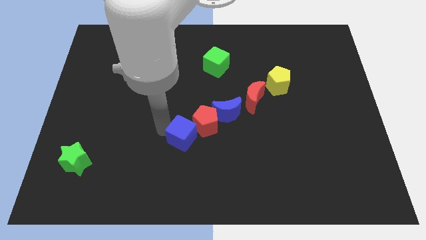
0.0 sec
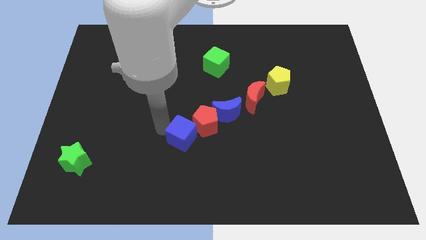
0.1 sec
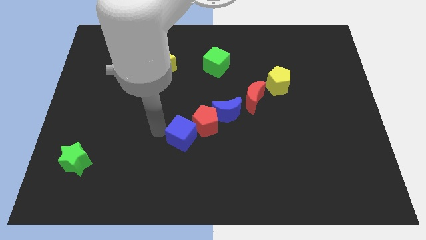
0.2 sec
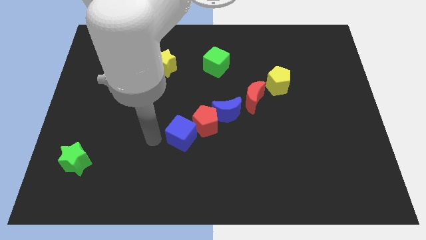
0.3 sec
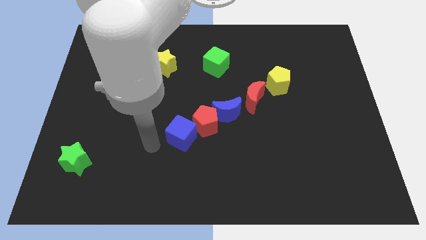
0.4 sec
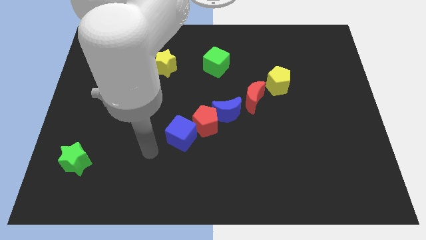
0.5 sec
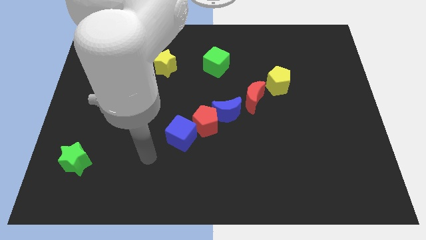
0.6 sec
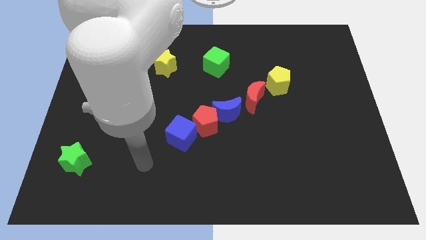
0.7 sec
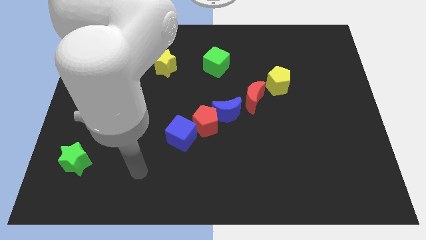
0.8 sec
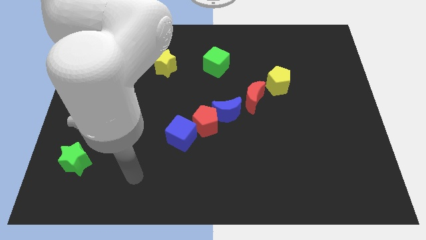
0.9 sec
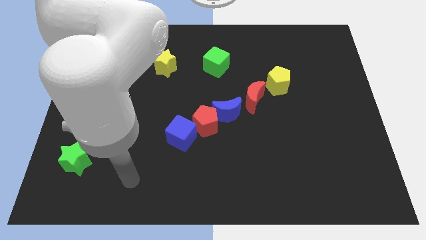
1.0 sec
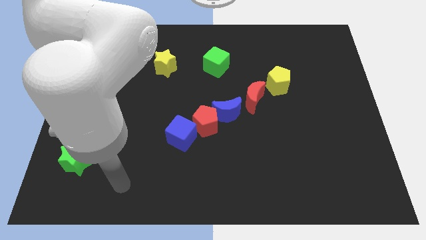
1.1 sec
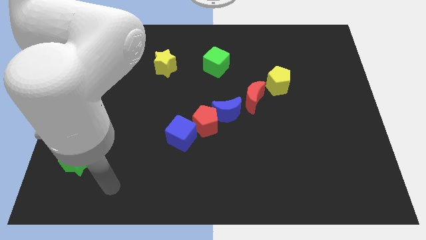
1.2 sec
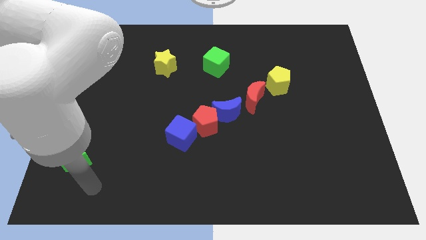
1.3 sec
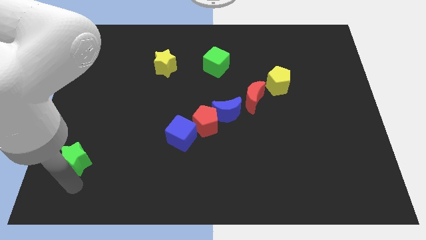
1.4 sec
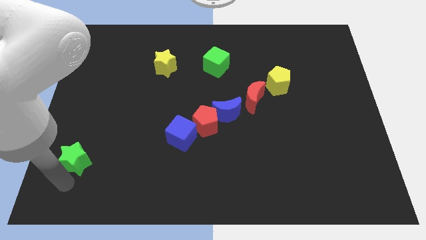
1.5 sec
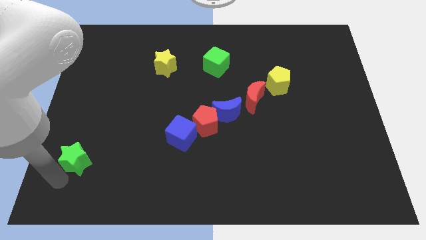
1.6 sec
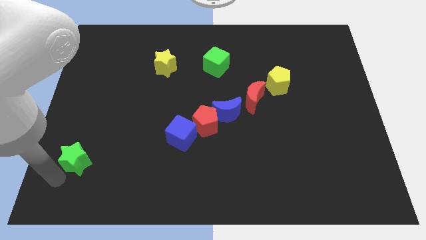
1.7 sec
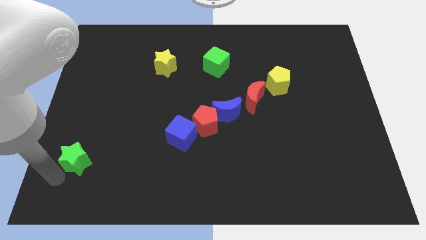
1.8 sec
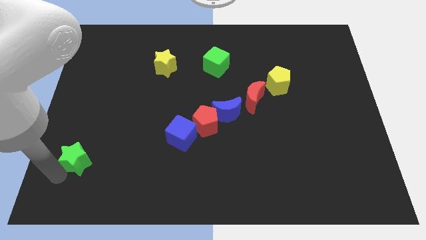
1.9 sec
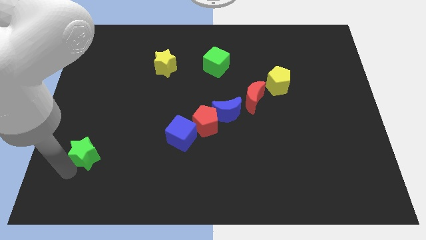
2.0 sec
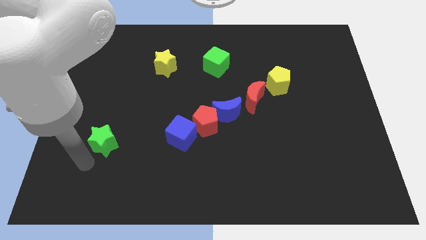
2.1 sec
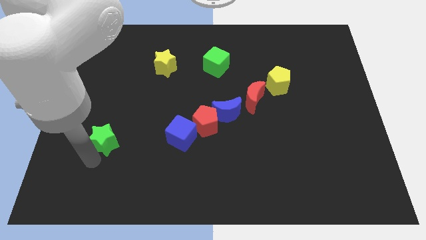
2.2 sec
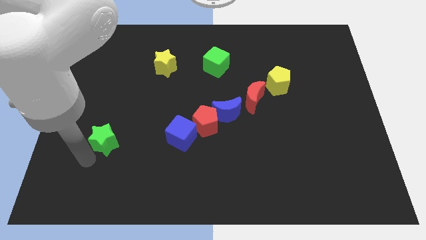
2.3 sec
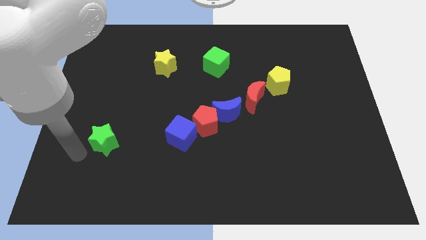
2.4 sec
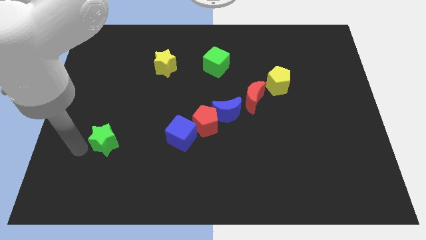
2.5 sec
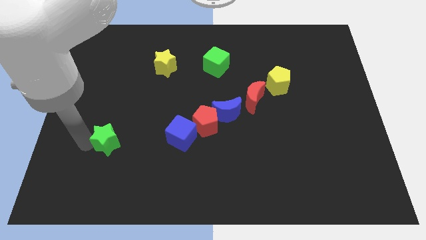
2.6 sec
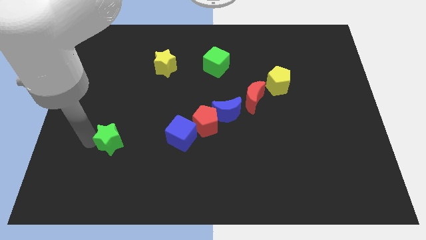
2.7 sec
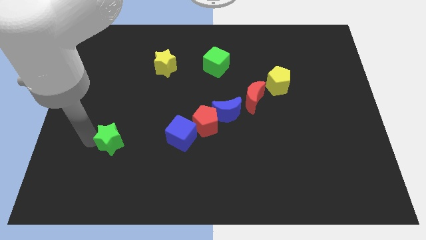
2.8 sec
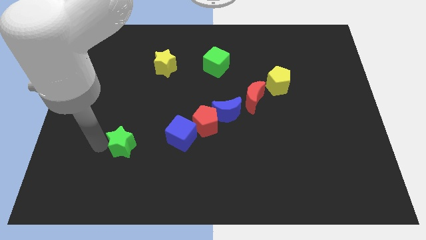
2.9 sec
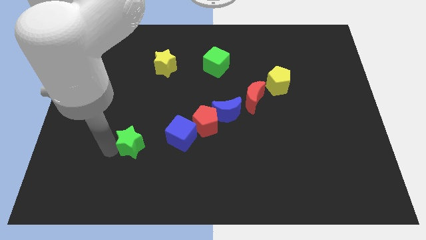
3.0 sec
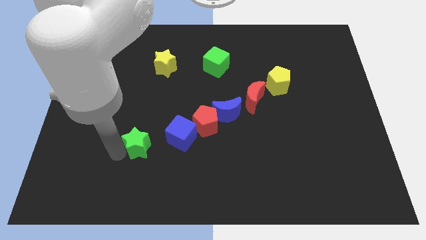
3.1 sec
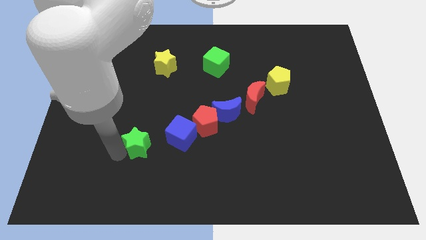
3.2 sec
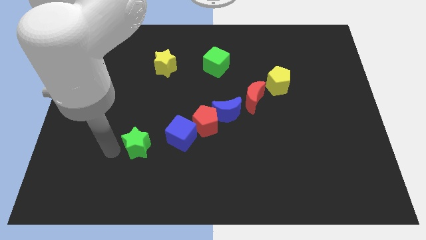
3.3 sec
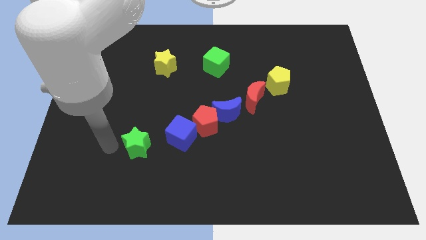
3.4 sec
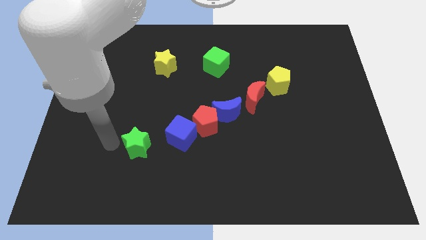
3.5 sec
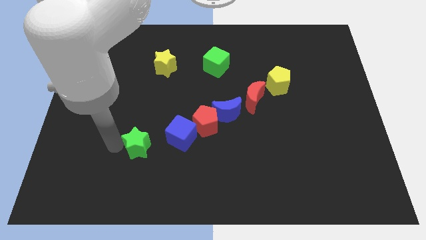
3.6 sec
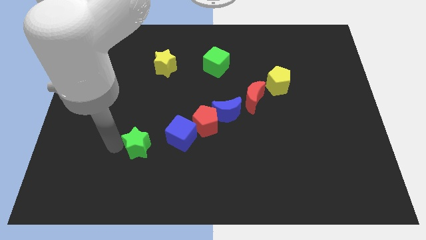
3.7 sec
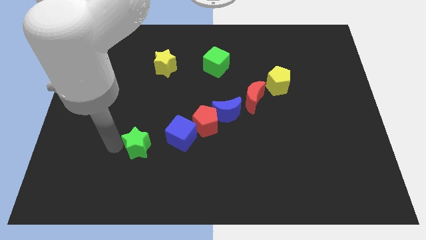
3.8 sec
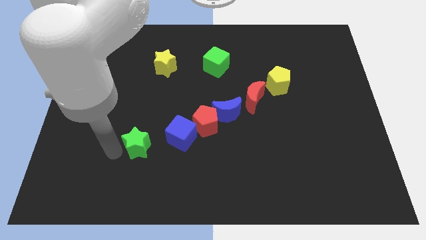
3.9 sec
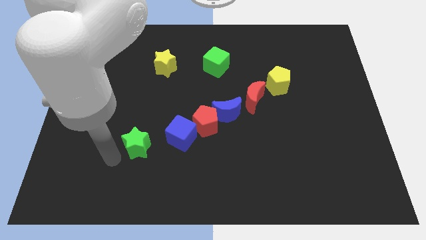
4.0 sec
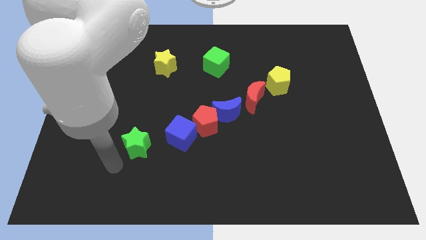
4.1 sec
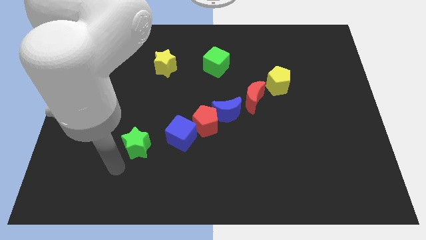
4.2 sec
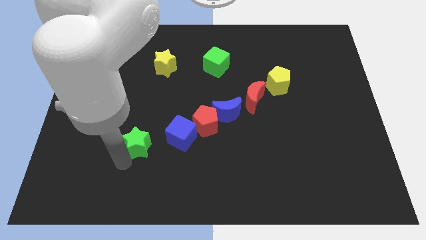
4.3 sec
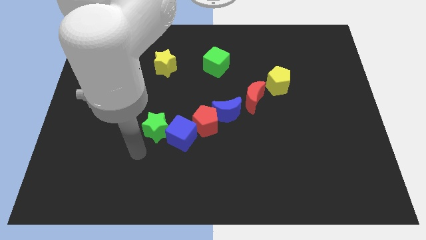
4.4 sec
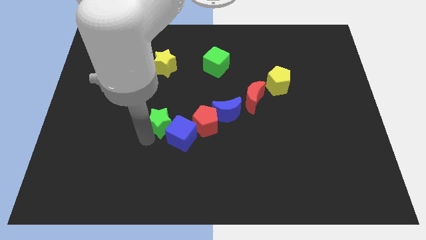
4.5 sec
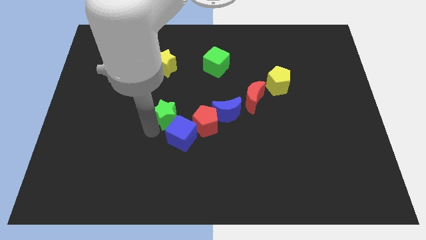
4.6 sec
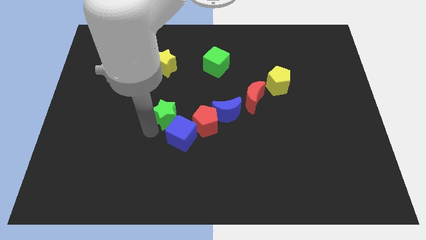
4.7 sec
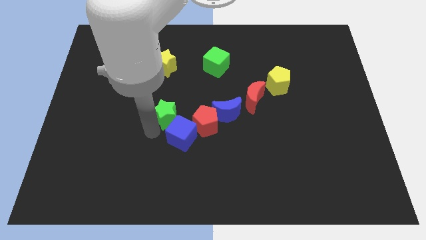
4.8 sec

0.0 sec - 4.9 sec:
place the green star at the top left side of blue cube

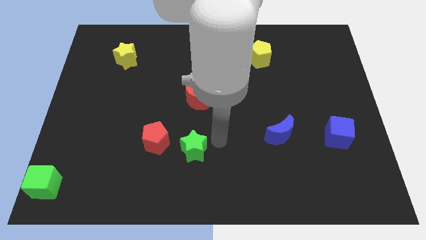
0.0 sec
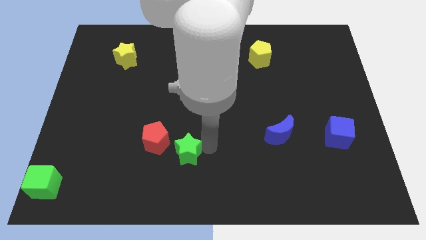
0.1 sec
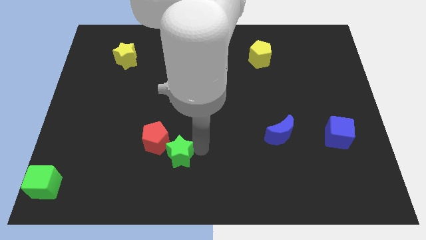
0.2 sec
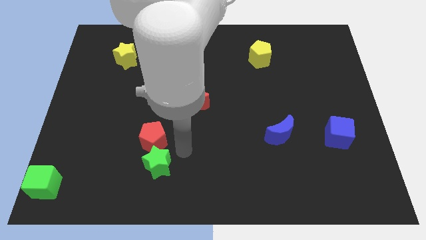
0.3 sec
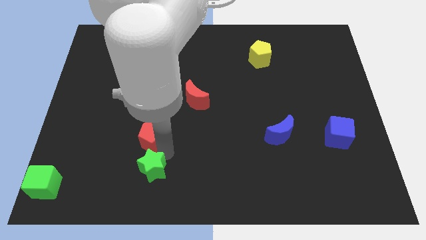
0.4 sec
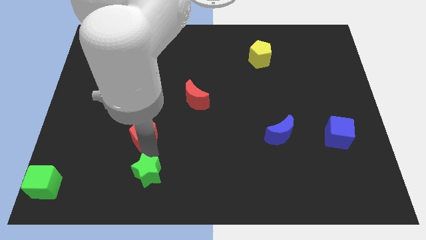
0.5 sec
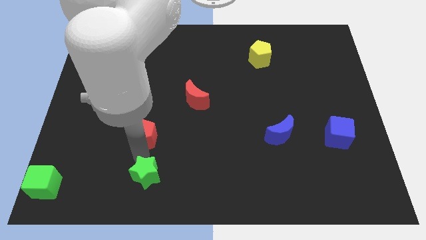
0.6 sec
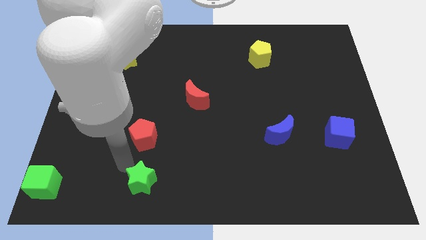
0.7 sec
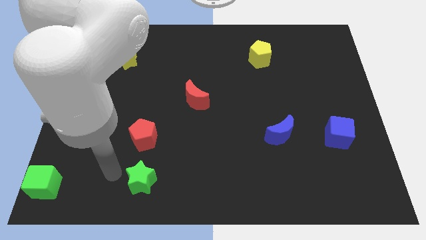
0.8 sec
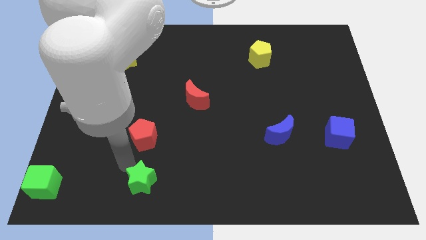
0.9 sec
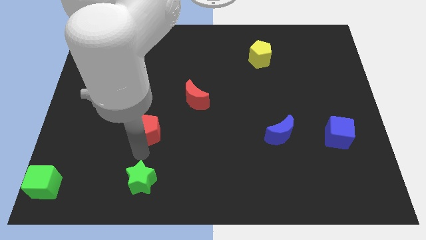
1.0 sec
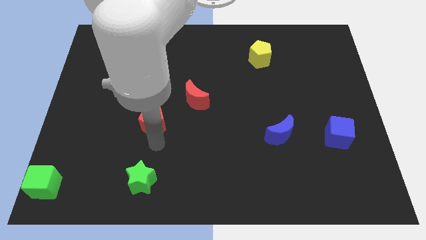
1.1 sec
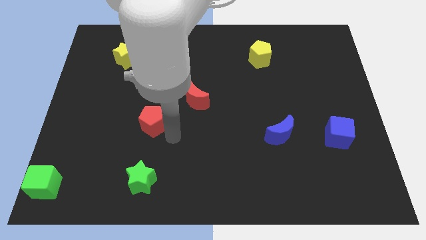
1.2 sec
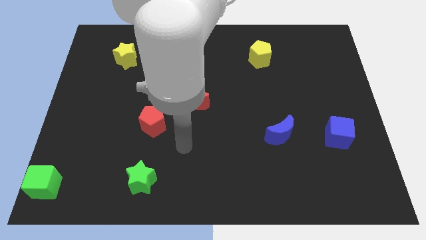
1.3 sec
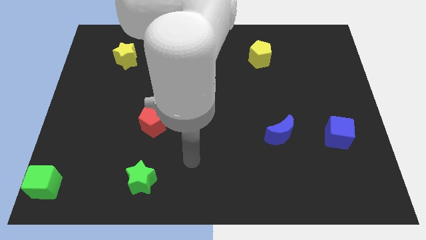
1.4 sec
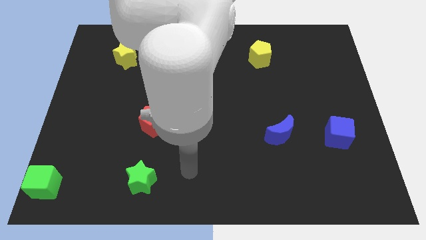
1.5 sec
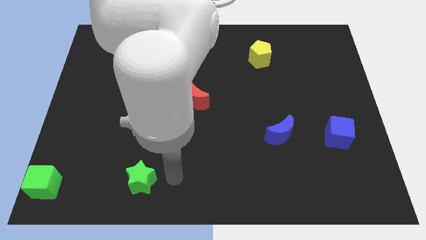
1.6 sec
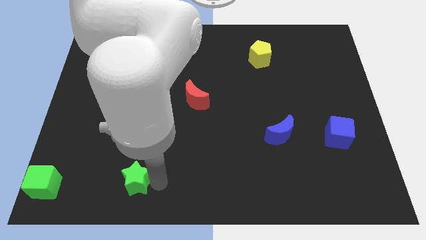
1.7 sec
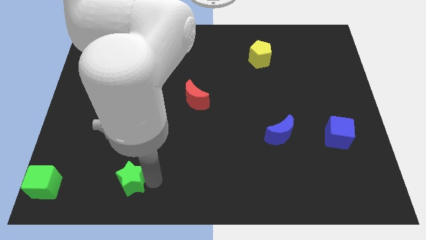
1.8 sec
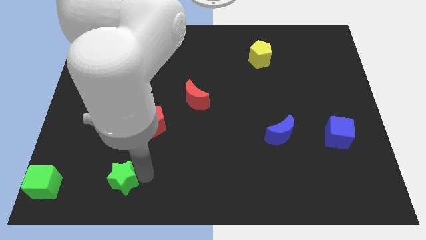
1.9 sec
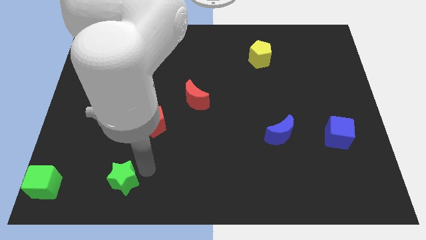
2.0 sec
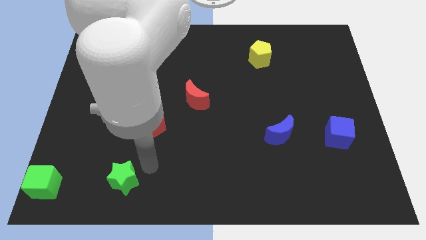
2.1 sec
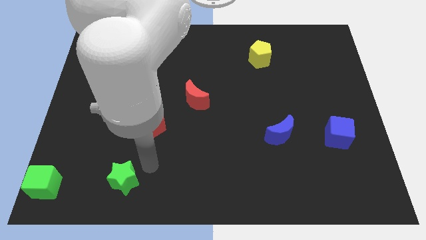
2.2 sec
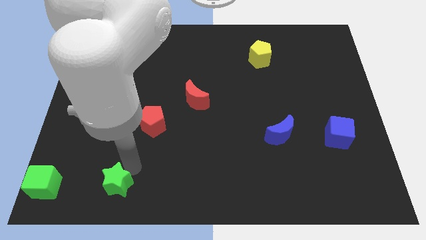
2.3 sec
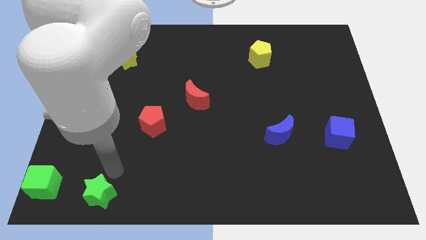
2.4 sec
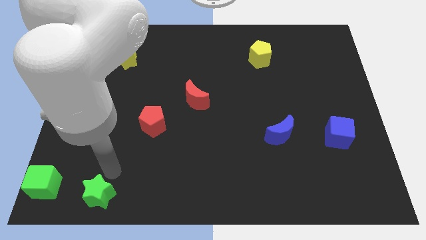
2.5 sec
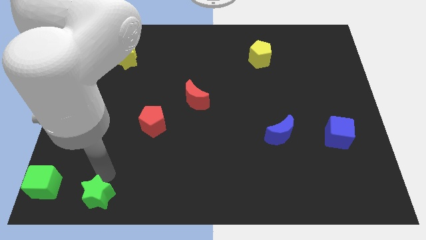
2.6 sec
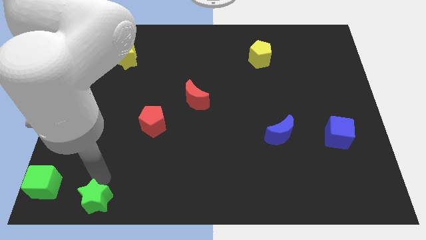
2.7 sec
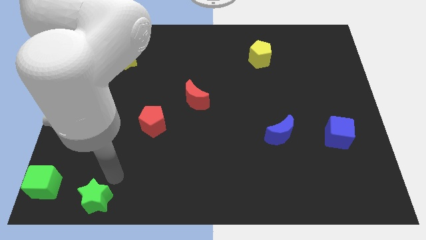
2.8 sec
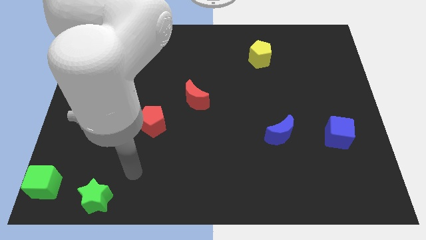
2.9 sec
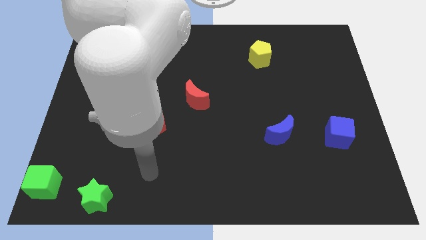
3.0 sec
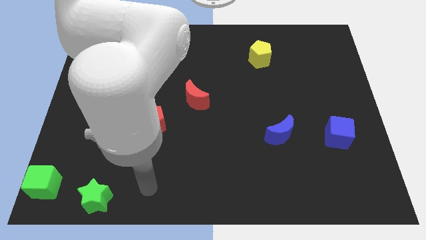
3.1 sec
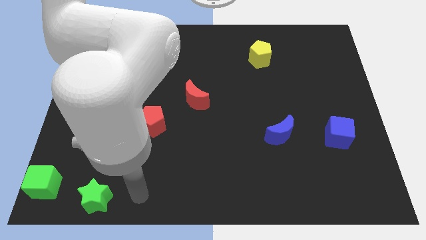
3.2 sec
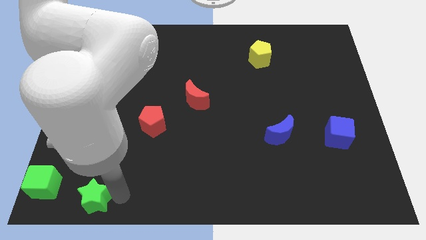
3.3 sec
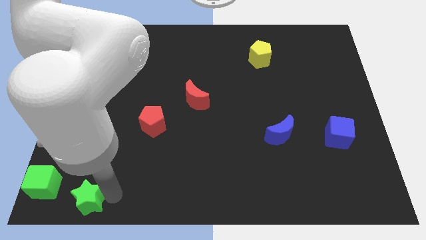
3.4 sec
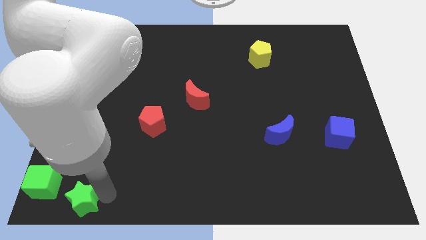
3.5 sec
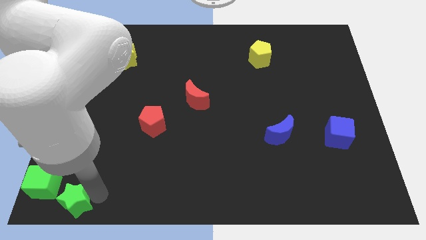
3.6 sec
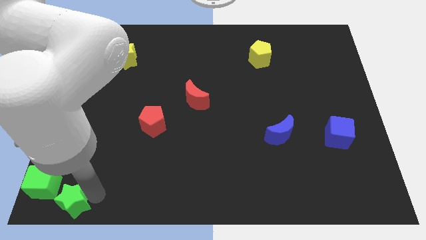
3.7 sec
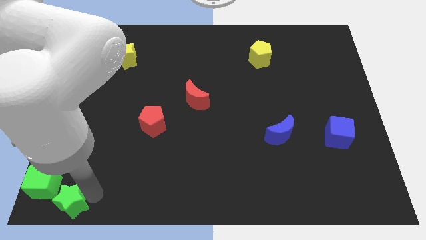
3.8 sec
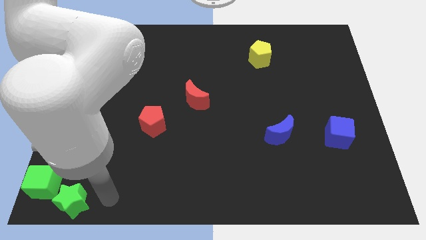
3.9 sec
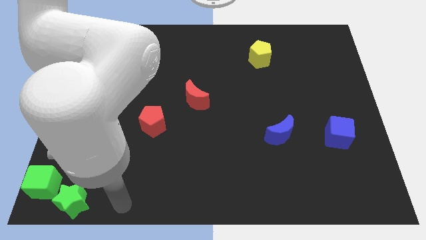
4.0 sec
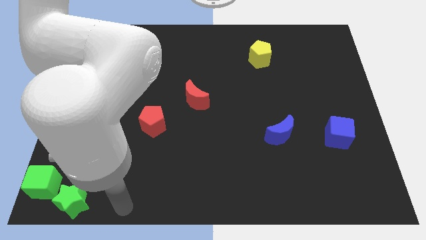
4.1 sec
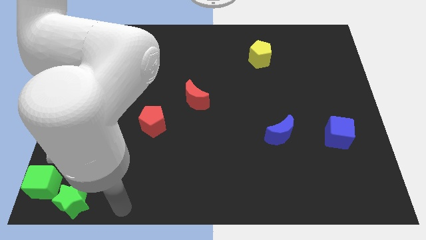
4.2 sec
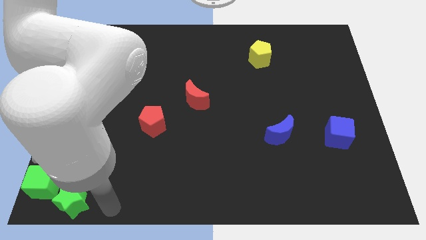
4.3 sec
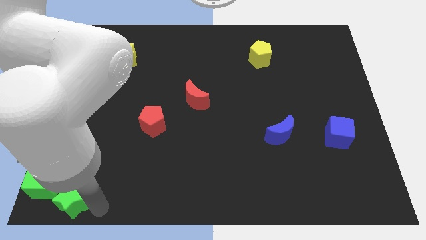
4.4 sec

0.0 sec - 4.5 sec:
push the green star towards bottom left corner
